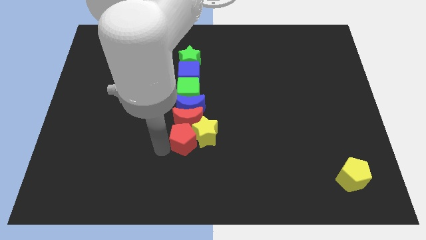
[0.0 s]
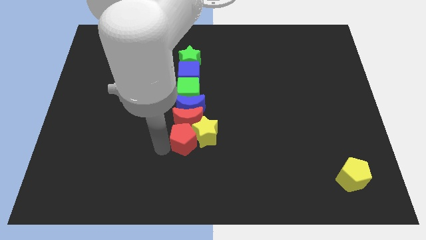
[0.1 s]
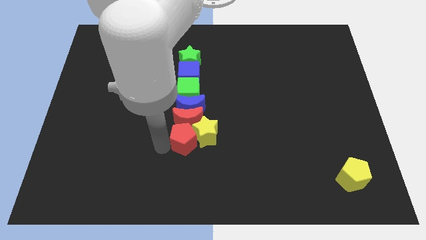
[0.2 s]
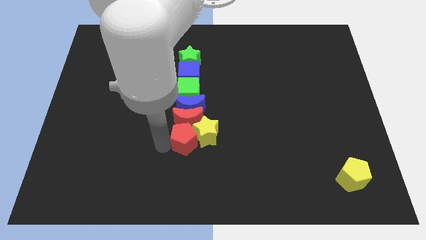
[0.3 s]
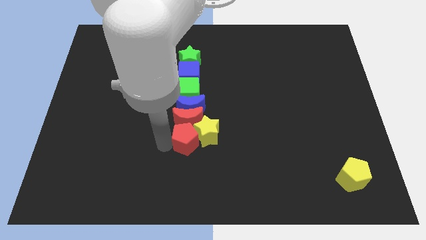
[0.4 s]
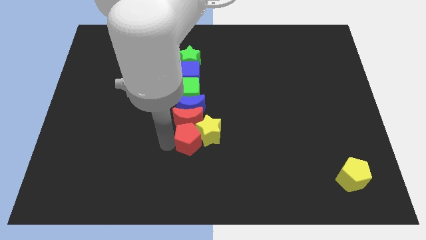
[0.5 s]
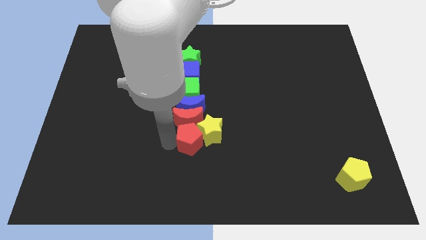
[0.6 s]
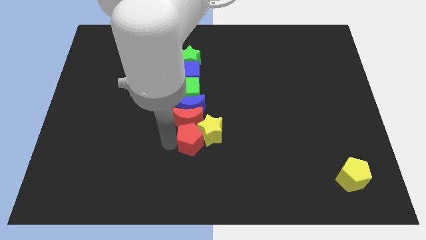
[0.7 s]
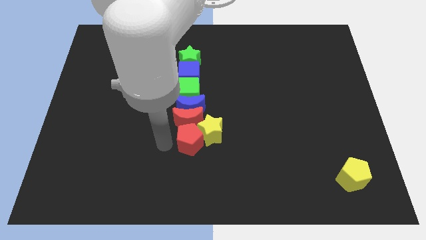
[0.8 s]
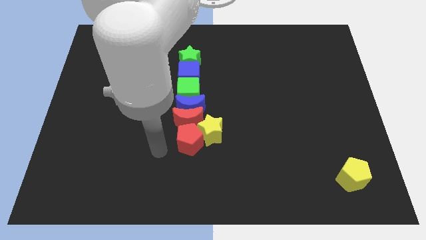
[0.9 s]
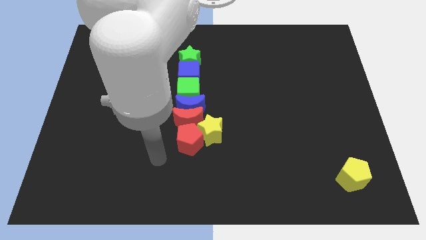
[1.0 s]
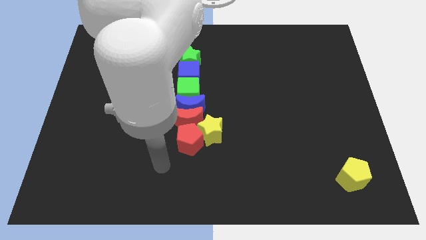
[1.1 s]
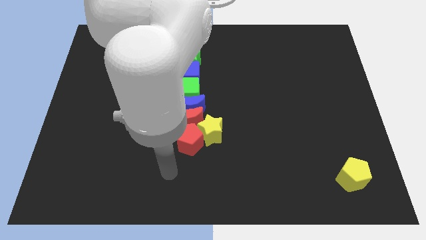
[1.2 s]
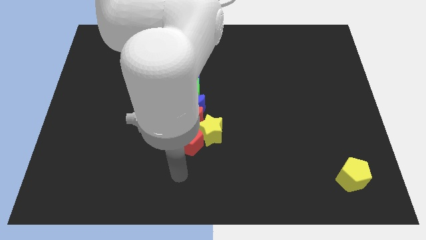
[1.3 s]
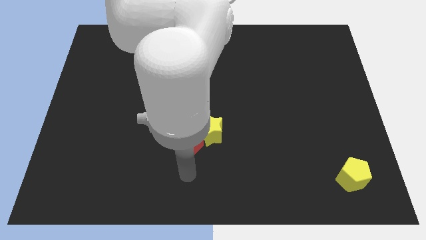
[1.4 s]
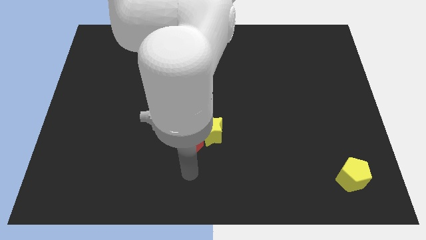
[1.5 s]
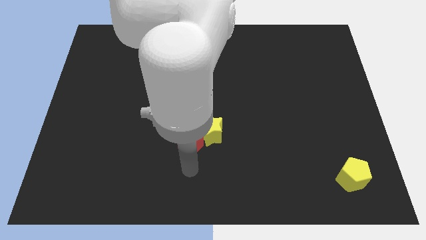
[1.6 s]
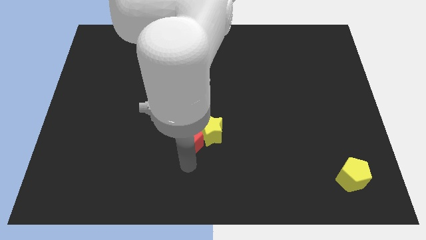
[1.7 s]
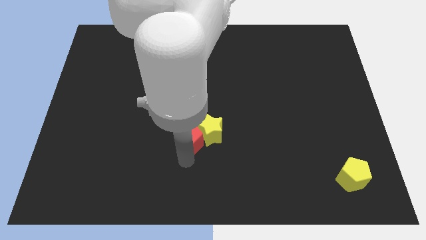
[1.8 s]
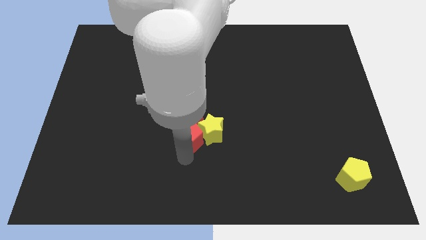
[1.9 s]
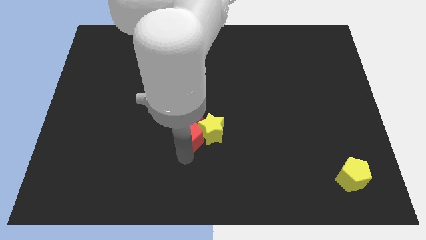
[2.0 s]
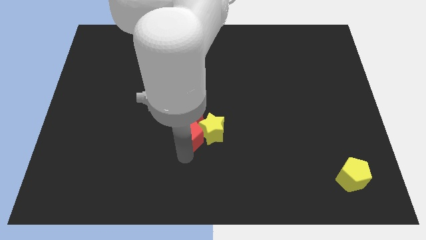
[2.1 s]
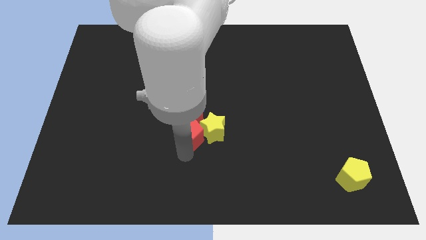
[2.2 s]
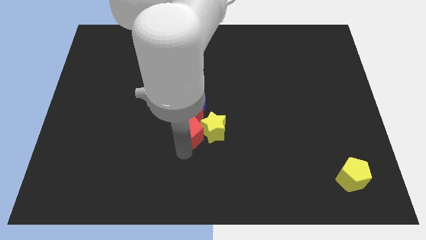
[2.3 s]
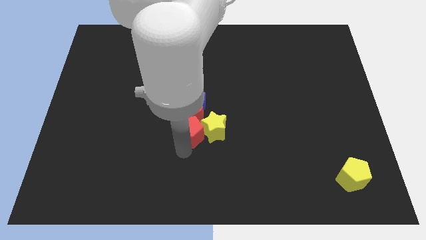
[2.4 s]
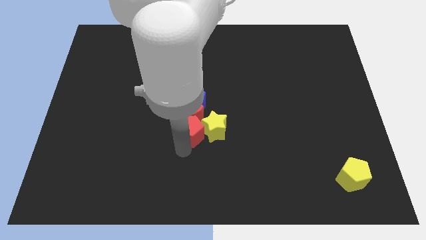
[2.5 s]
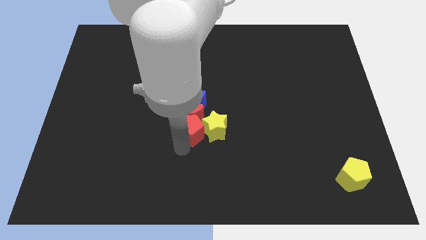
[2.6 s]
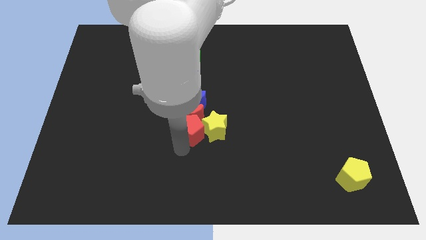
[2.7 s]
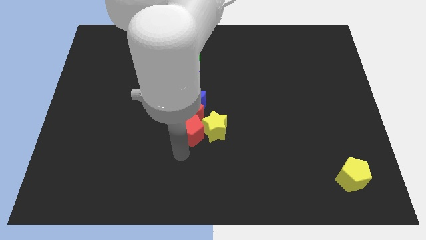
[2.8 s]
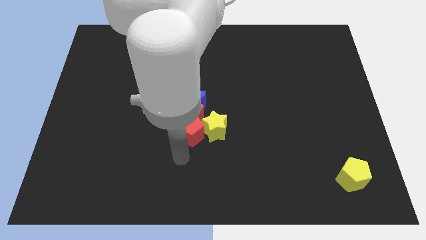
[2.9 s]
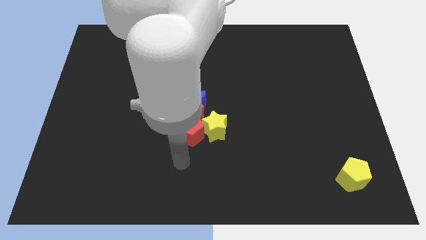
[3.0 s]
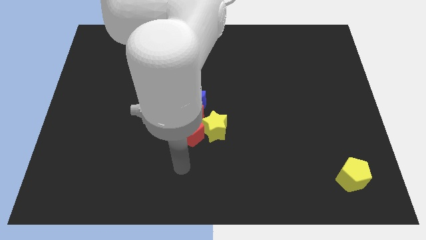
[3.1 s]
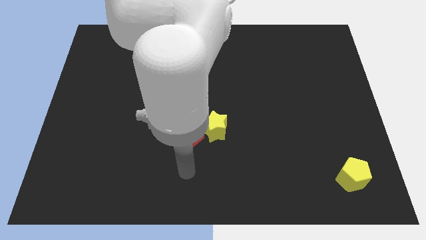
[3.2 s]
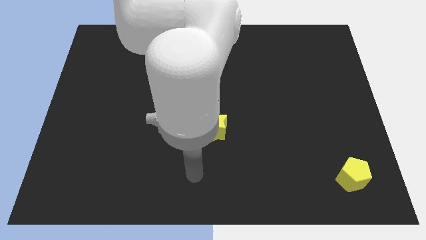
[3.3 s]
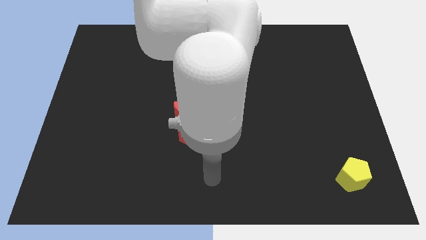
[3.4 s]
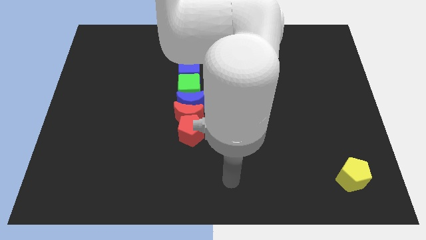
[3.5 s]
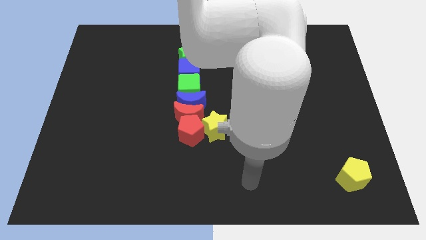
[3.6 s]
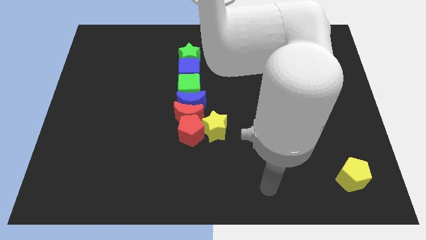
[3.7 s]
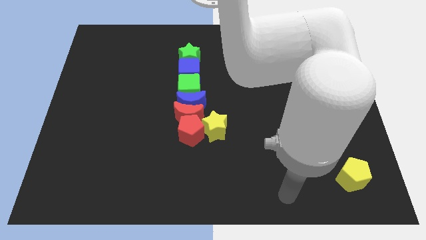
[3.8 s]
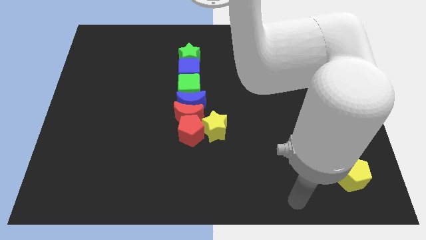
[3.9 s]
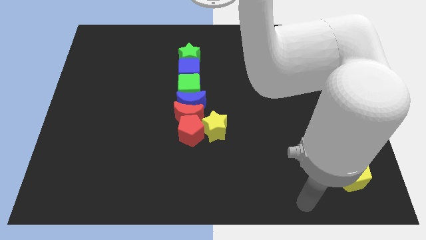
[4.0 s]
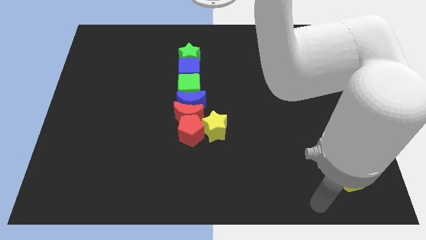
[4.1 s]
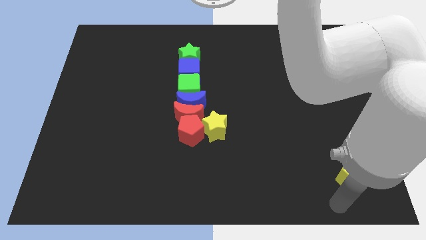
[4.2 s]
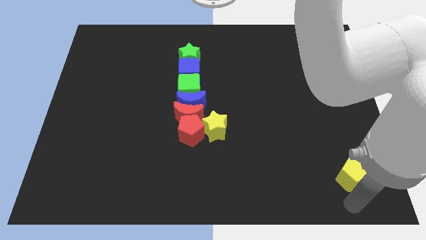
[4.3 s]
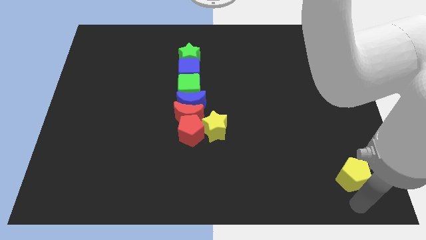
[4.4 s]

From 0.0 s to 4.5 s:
point your arm at the bottom side of the yellow pentagon

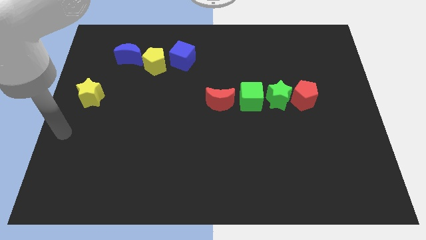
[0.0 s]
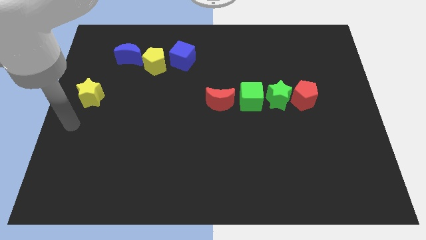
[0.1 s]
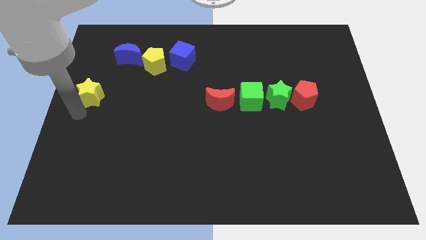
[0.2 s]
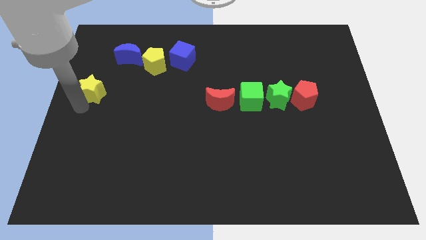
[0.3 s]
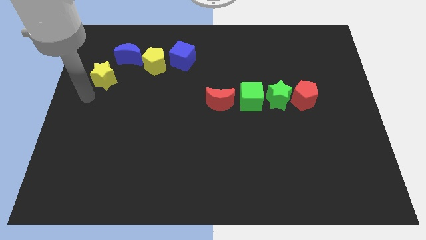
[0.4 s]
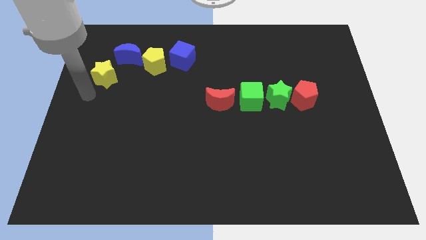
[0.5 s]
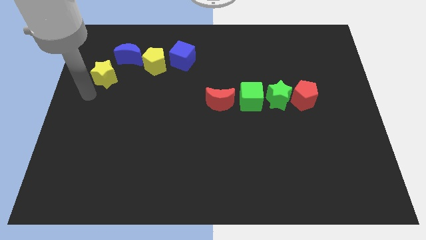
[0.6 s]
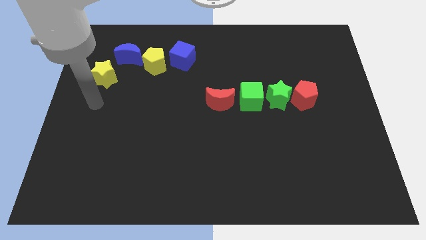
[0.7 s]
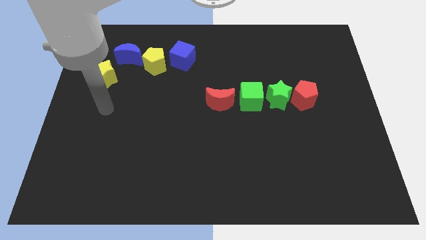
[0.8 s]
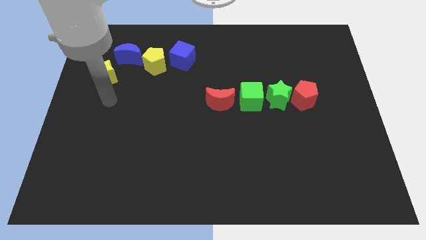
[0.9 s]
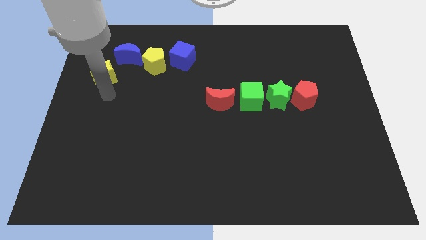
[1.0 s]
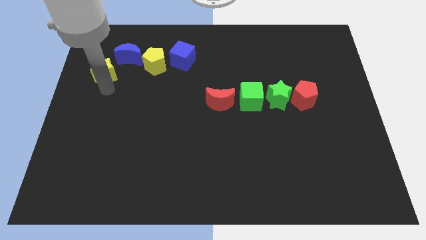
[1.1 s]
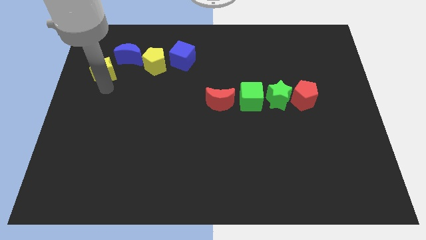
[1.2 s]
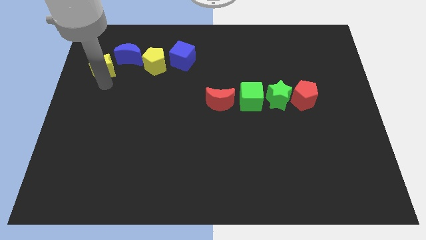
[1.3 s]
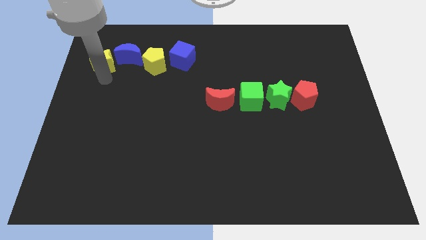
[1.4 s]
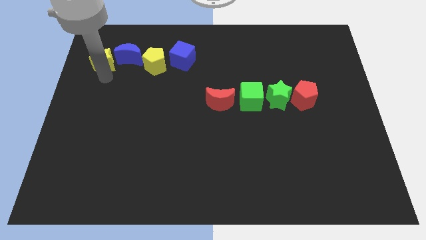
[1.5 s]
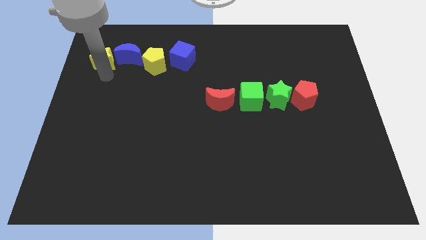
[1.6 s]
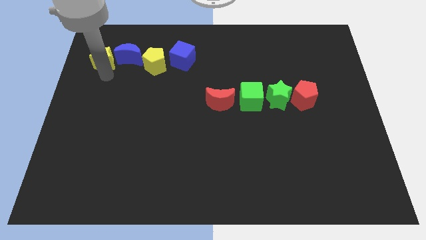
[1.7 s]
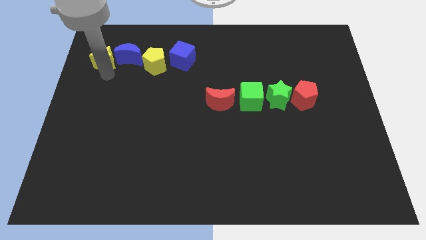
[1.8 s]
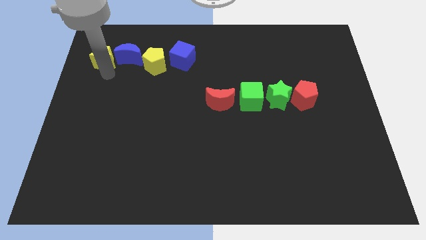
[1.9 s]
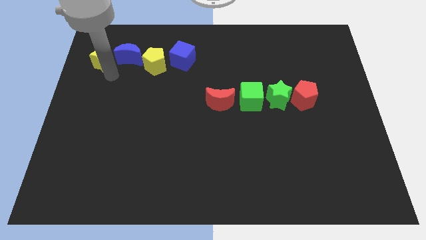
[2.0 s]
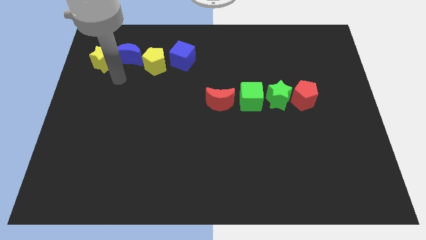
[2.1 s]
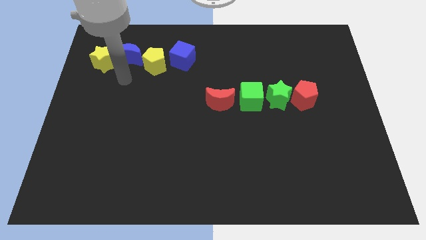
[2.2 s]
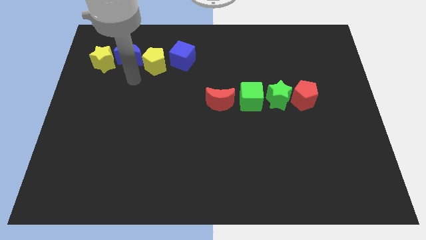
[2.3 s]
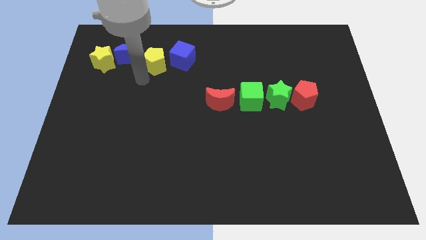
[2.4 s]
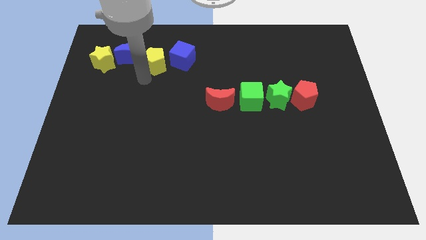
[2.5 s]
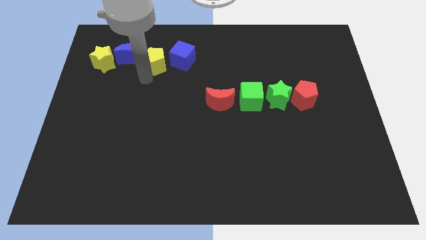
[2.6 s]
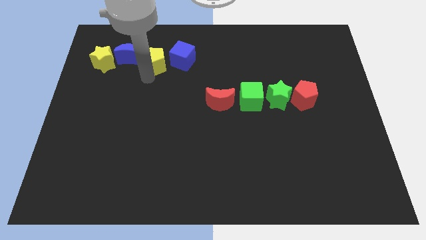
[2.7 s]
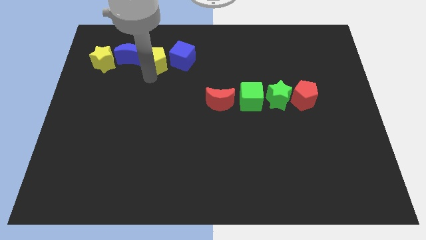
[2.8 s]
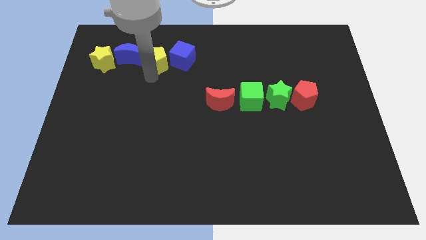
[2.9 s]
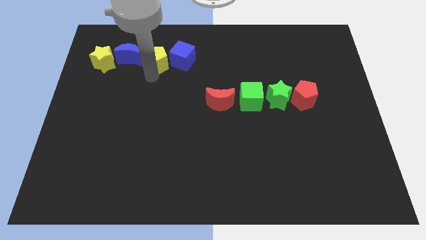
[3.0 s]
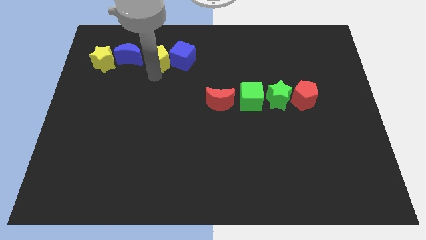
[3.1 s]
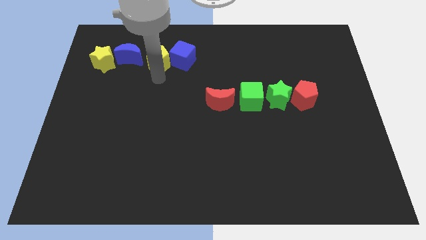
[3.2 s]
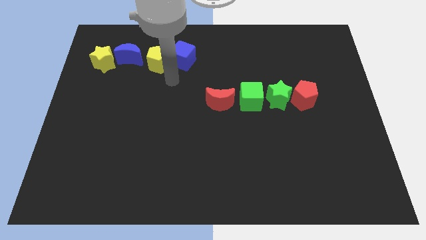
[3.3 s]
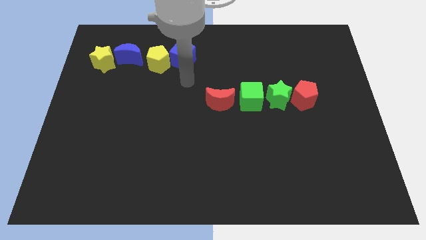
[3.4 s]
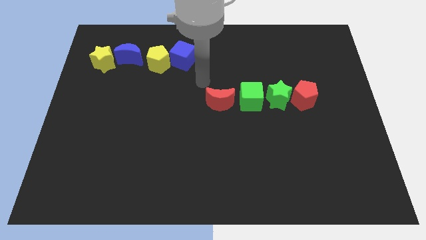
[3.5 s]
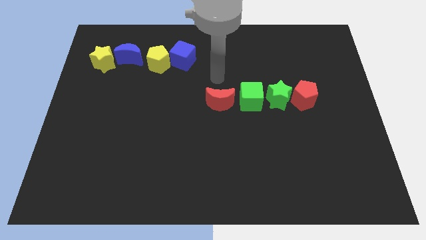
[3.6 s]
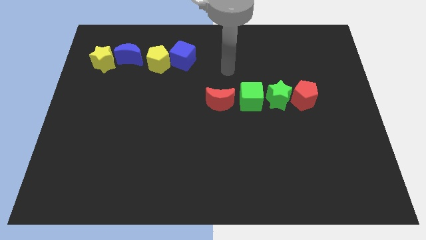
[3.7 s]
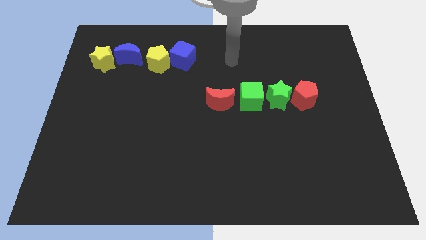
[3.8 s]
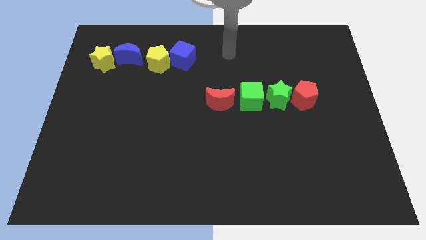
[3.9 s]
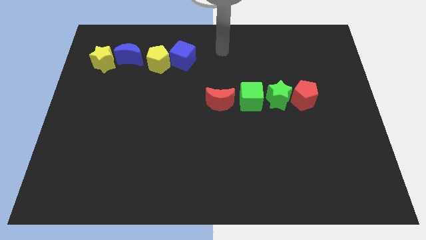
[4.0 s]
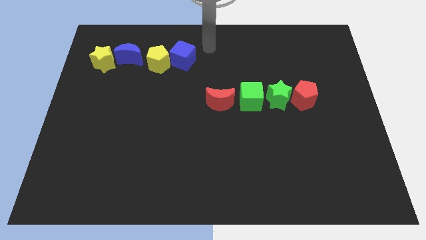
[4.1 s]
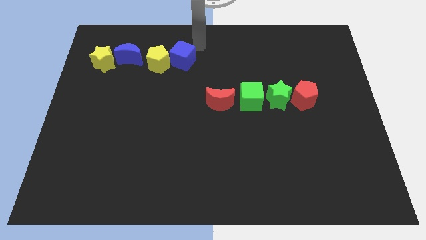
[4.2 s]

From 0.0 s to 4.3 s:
place the yellow star close to the blue moon

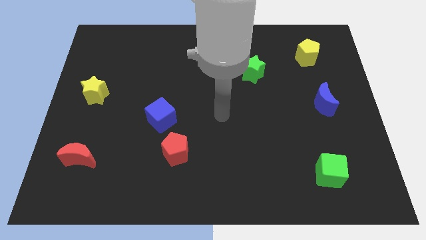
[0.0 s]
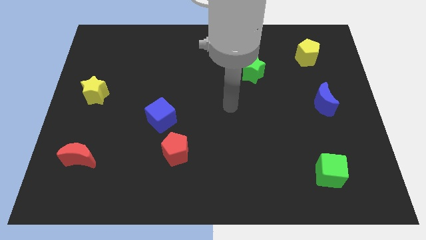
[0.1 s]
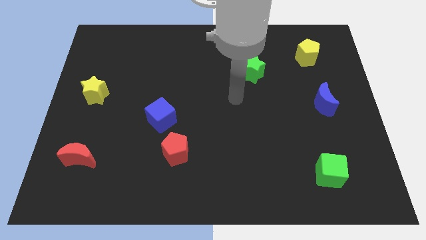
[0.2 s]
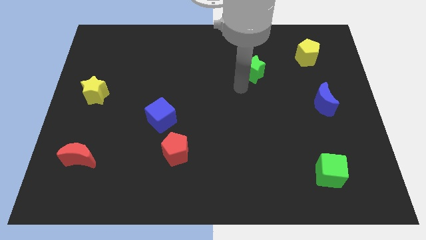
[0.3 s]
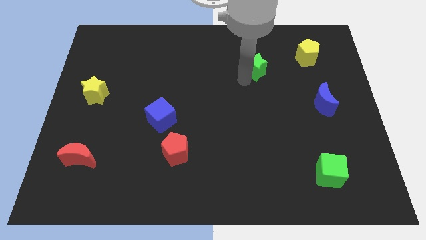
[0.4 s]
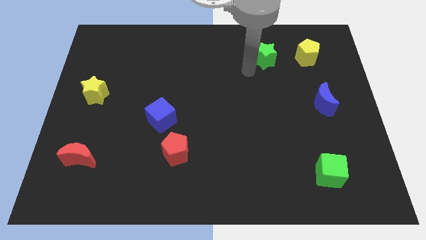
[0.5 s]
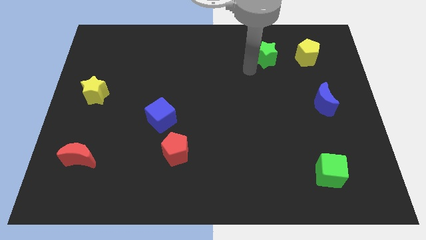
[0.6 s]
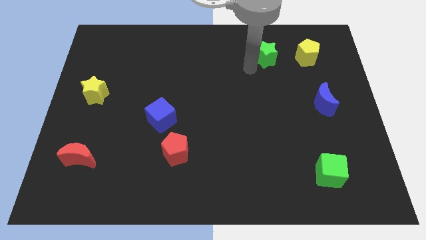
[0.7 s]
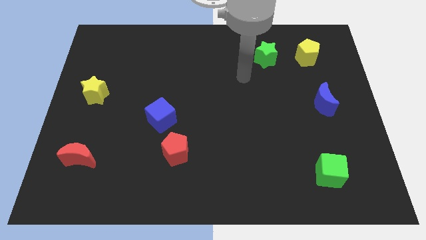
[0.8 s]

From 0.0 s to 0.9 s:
push the green star to the left of the yellow pentagon
